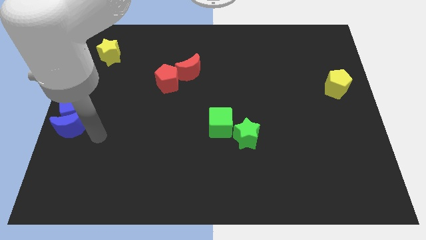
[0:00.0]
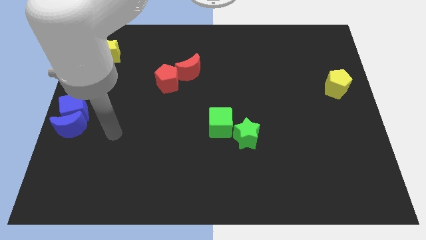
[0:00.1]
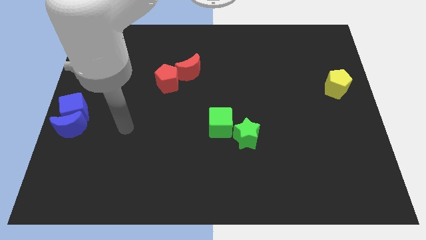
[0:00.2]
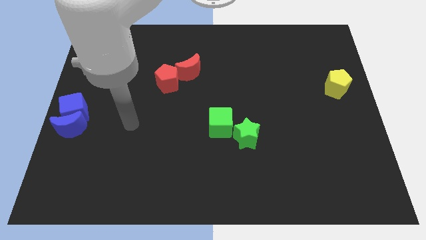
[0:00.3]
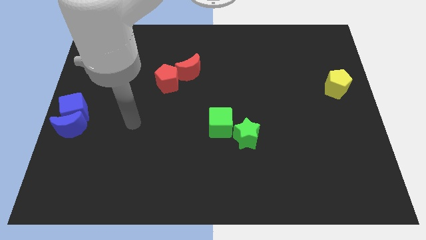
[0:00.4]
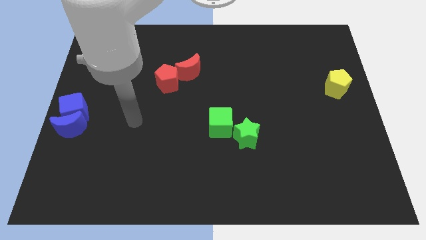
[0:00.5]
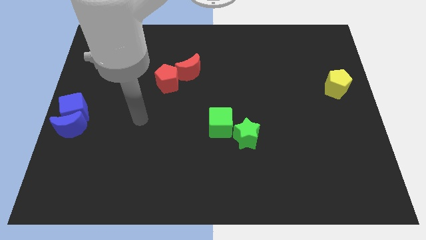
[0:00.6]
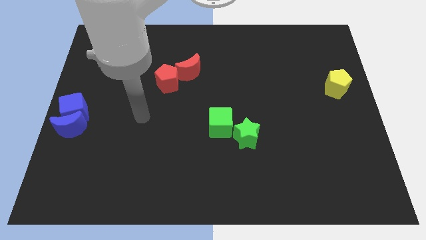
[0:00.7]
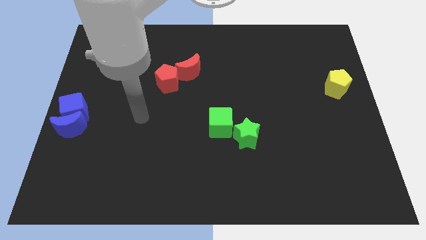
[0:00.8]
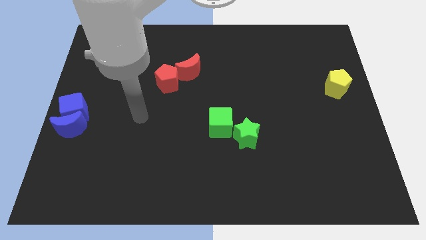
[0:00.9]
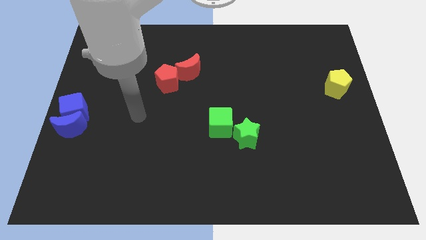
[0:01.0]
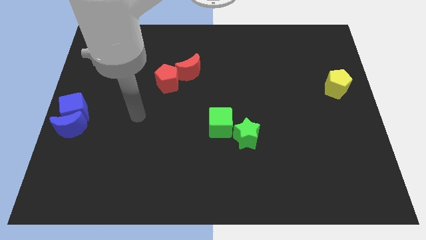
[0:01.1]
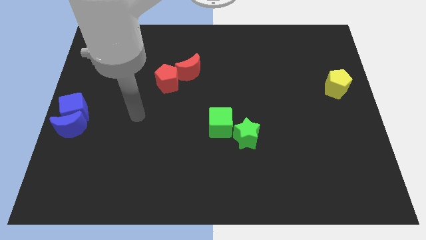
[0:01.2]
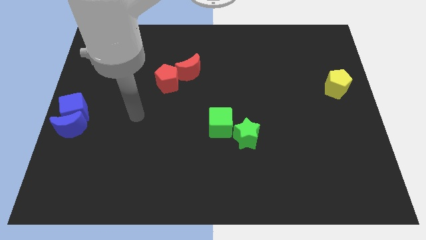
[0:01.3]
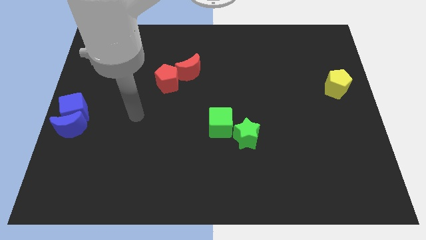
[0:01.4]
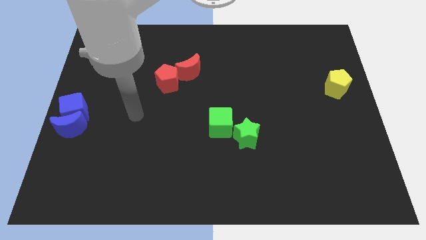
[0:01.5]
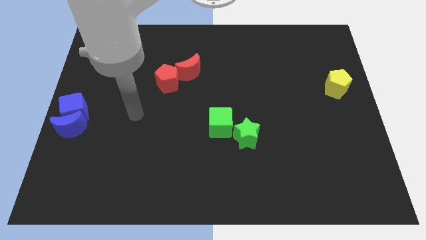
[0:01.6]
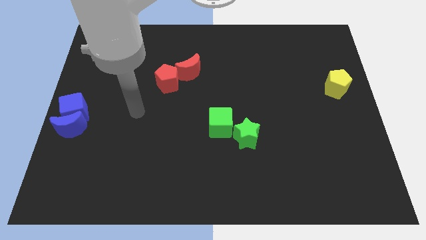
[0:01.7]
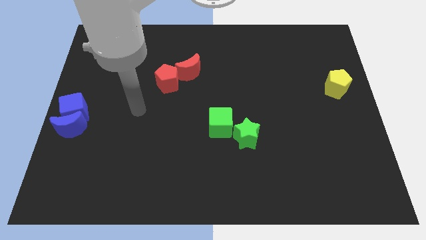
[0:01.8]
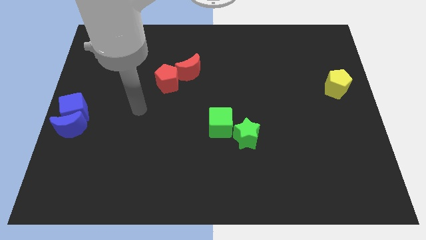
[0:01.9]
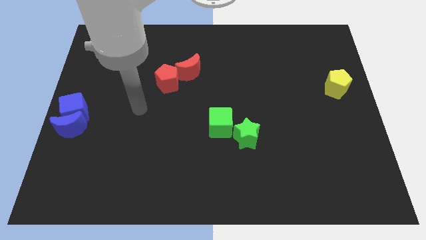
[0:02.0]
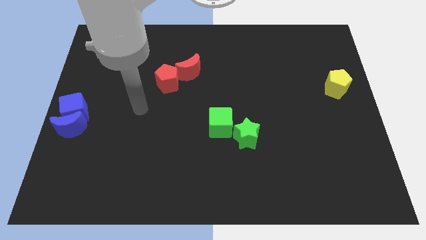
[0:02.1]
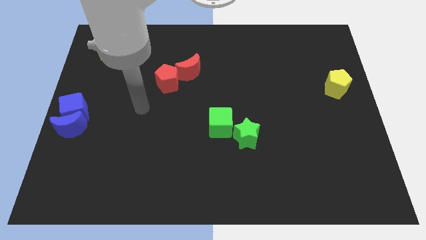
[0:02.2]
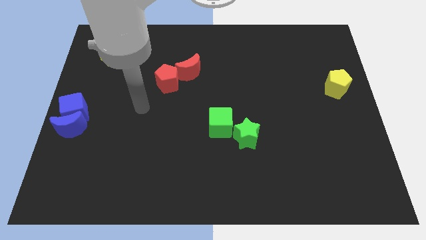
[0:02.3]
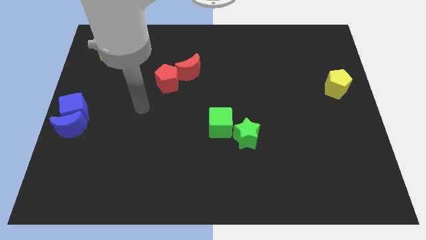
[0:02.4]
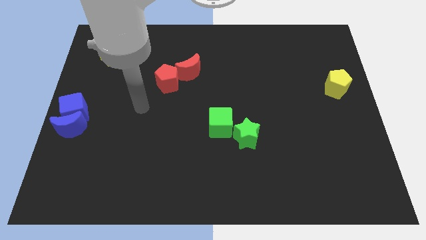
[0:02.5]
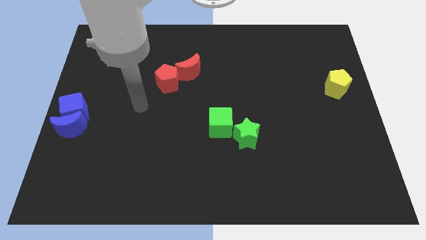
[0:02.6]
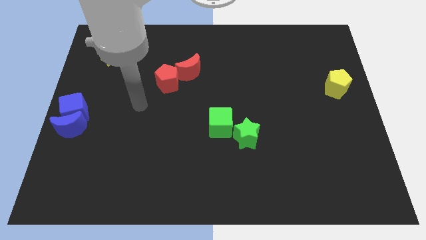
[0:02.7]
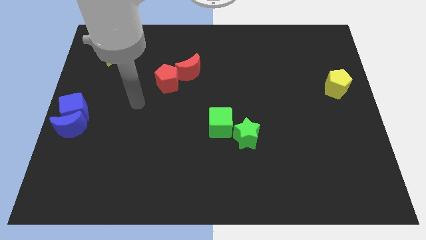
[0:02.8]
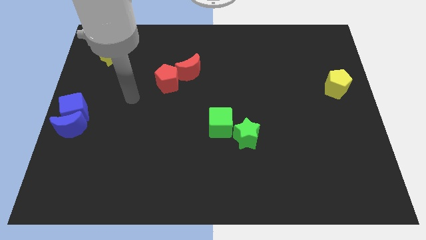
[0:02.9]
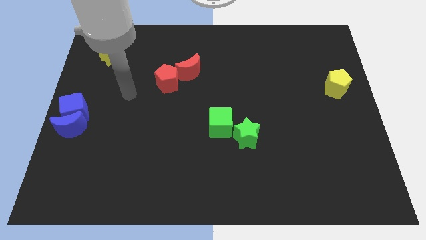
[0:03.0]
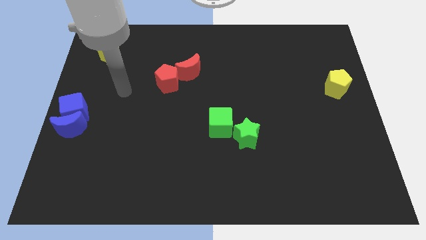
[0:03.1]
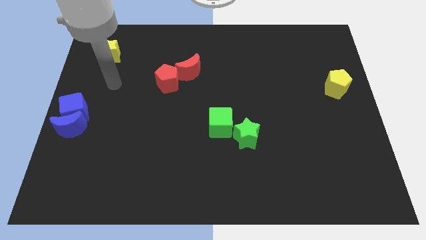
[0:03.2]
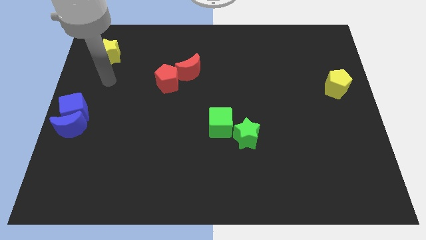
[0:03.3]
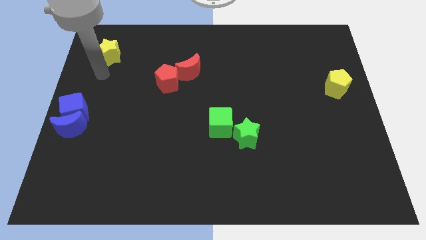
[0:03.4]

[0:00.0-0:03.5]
place your arm below the yellow star

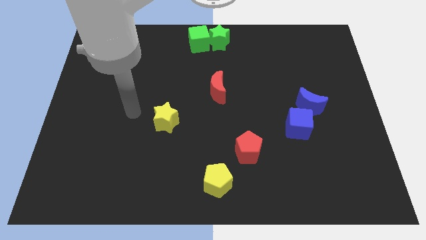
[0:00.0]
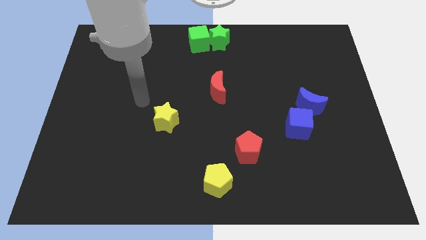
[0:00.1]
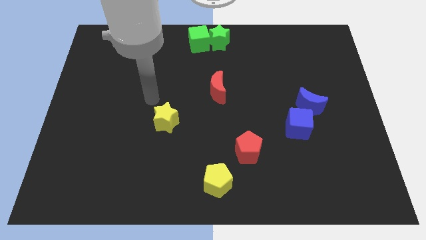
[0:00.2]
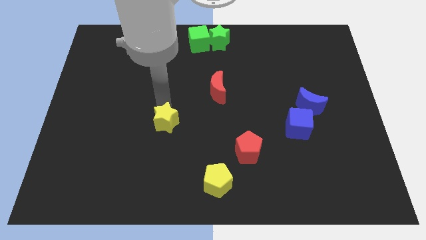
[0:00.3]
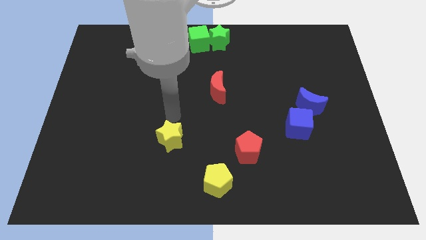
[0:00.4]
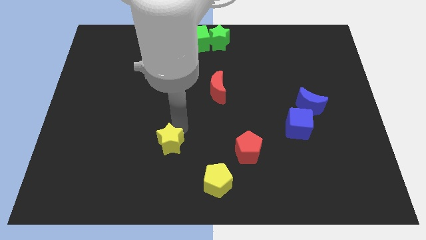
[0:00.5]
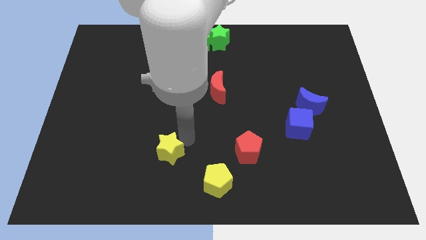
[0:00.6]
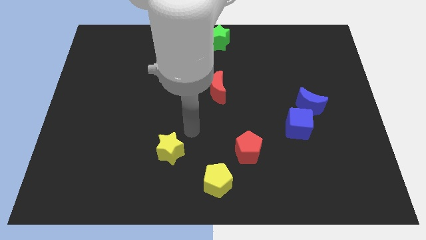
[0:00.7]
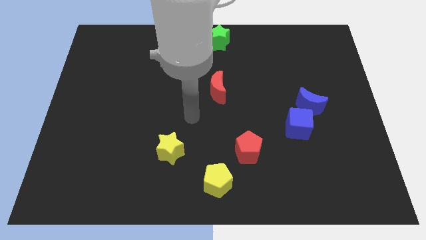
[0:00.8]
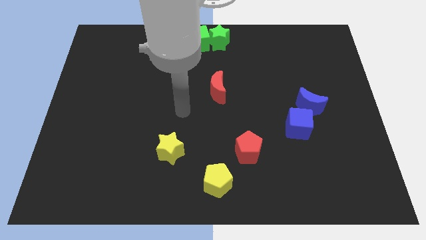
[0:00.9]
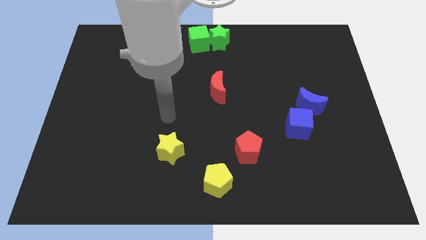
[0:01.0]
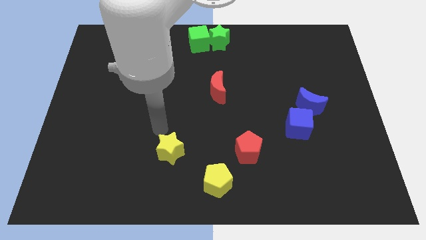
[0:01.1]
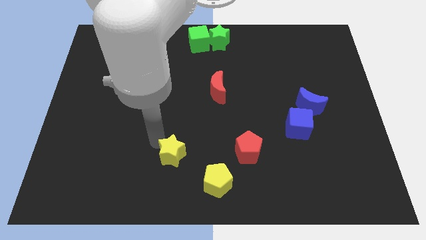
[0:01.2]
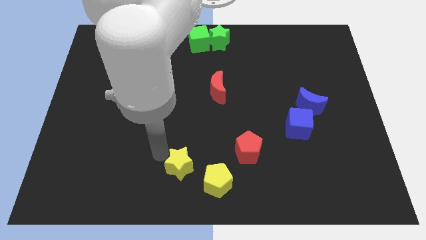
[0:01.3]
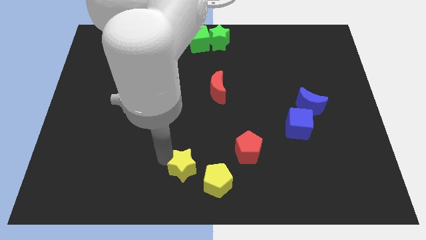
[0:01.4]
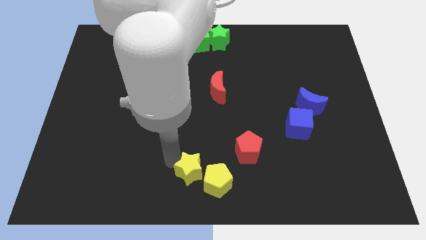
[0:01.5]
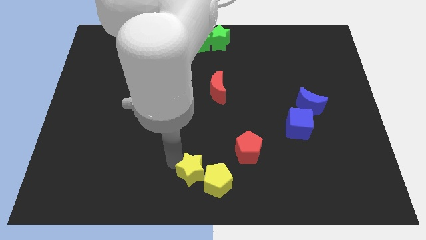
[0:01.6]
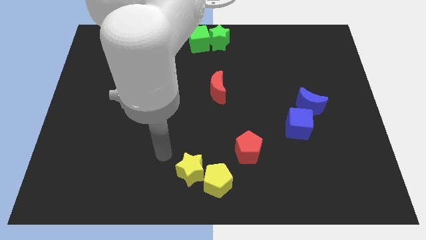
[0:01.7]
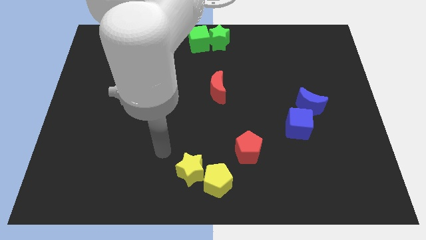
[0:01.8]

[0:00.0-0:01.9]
push the yellow star close to the yellow pentagon

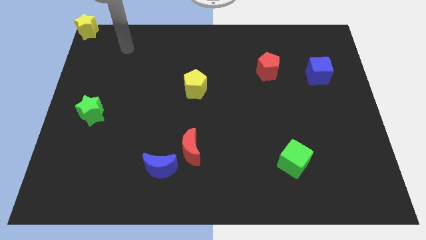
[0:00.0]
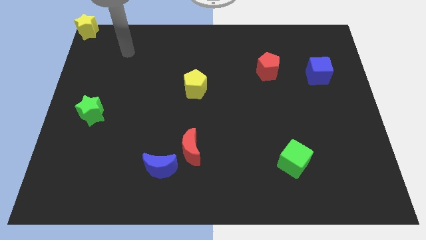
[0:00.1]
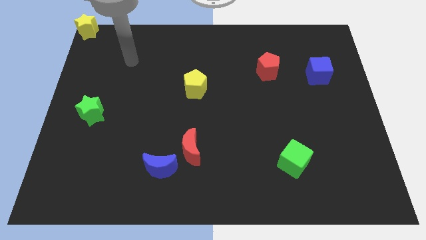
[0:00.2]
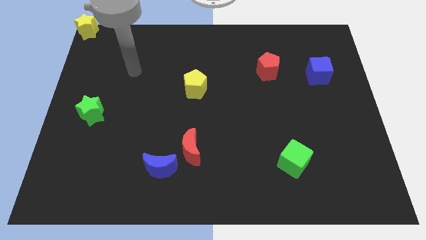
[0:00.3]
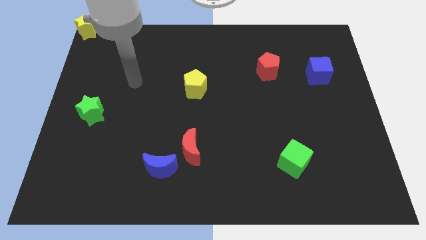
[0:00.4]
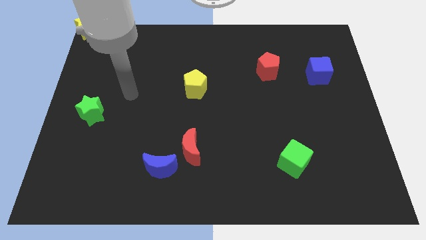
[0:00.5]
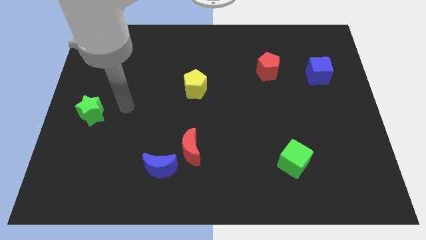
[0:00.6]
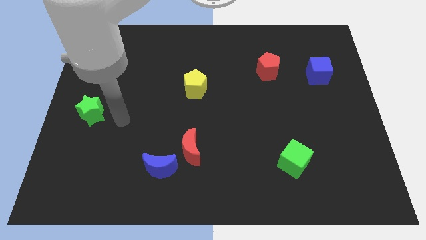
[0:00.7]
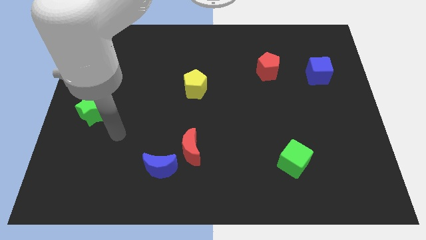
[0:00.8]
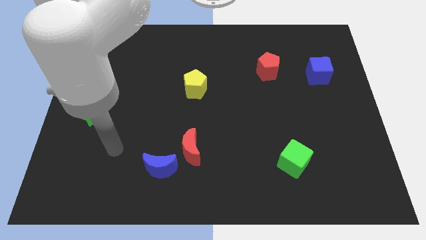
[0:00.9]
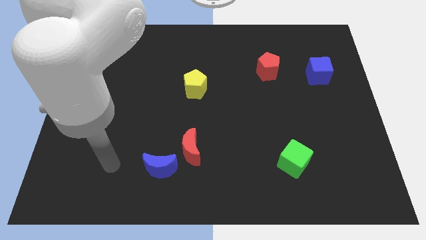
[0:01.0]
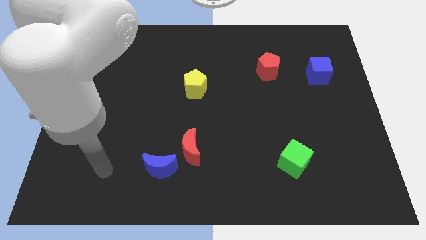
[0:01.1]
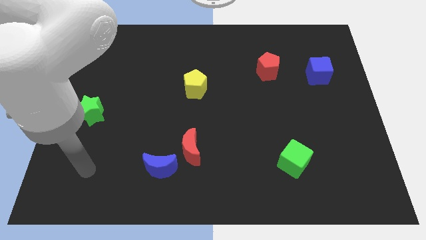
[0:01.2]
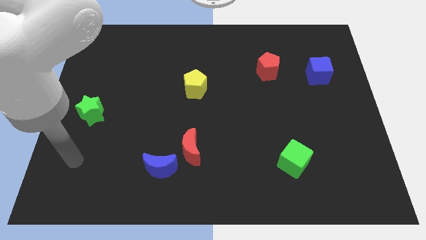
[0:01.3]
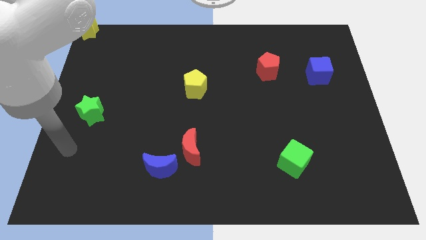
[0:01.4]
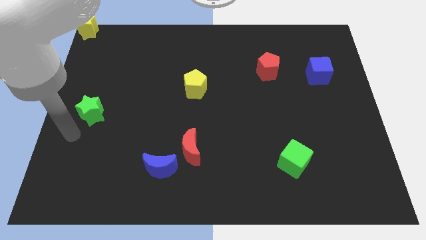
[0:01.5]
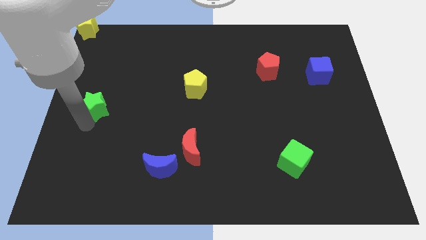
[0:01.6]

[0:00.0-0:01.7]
place your arm to the bottom of green star

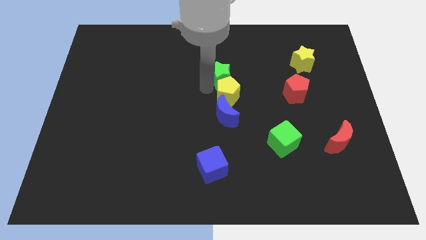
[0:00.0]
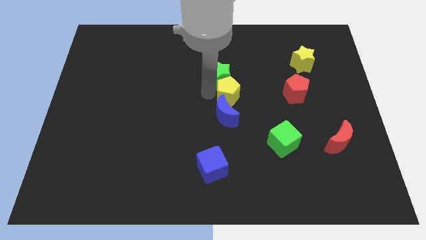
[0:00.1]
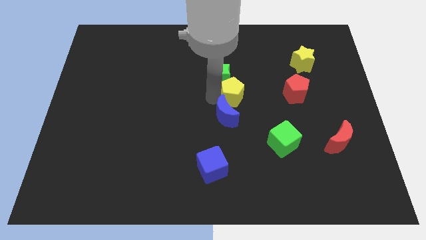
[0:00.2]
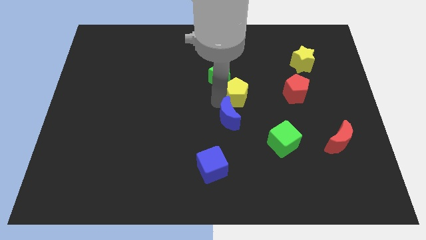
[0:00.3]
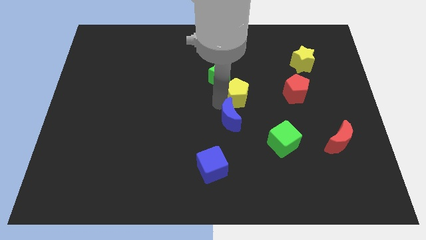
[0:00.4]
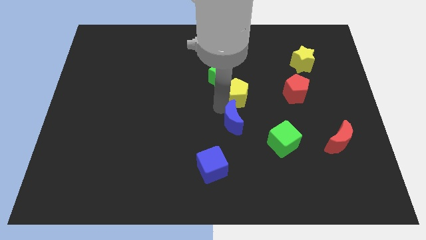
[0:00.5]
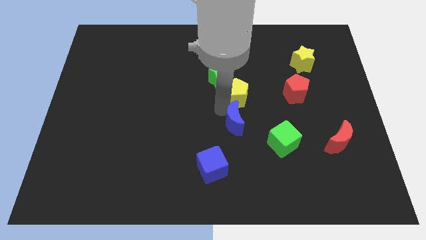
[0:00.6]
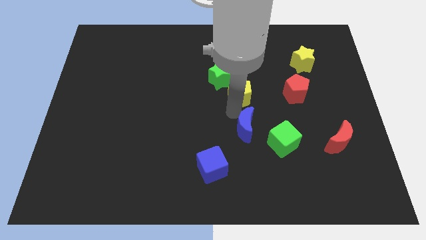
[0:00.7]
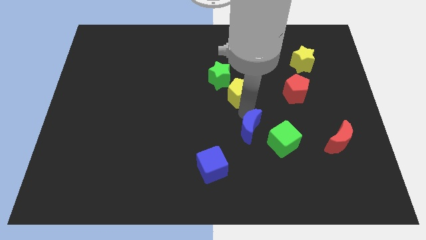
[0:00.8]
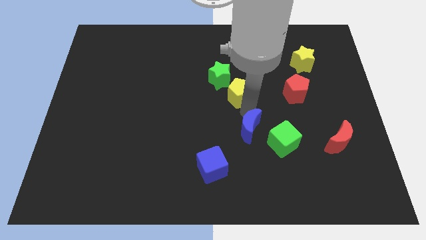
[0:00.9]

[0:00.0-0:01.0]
separate the blue crescent from the yellow pentagon

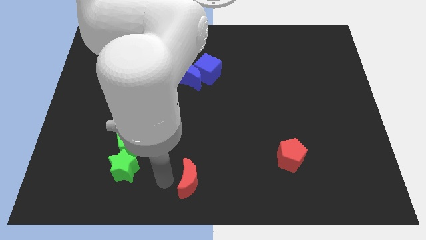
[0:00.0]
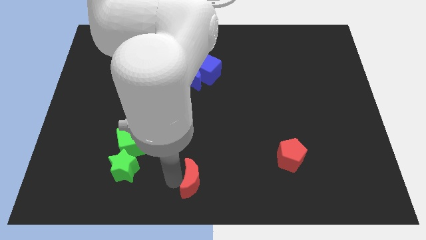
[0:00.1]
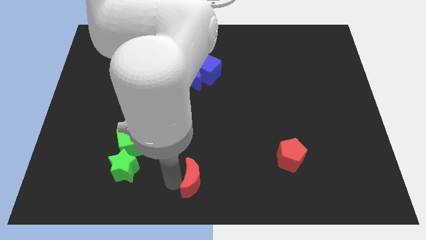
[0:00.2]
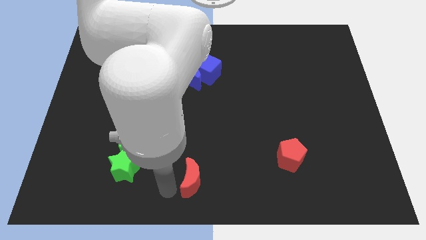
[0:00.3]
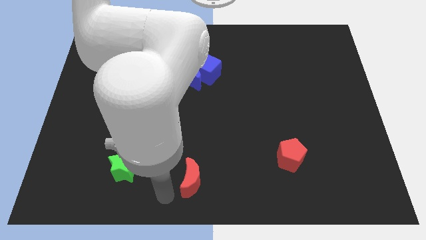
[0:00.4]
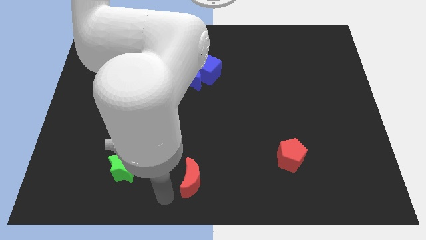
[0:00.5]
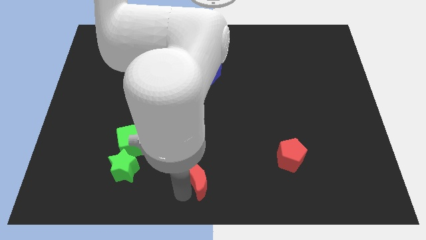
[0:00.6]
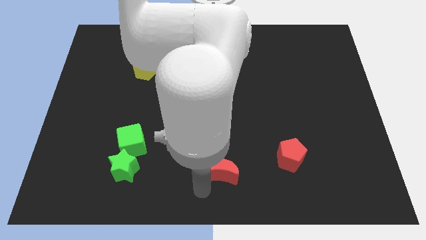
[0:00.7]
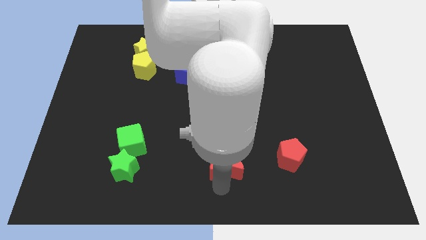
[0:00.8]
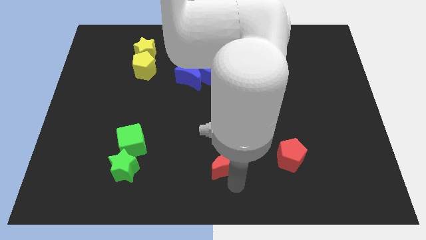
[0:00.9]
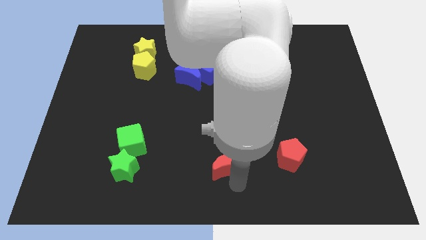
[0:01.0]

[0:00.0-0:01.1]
place the red moon at the bottom center of the board
